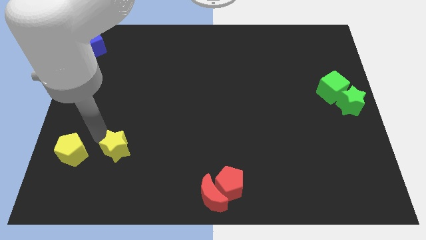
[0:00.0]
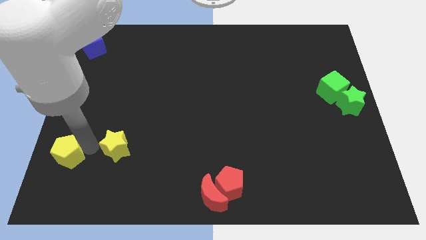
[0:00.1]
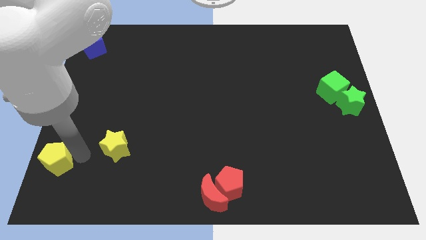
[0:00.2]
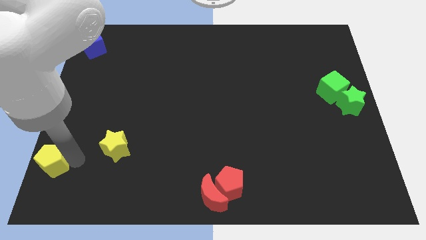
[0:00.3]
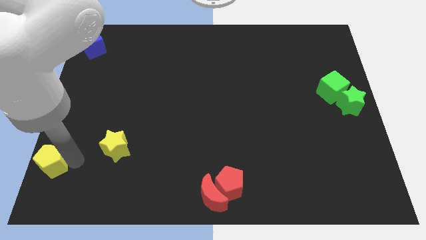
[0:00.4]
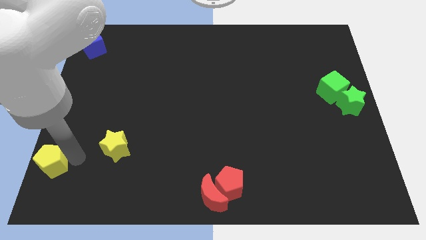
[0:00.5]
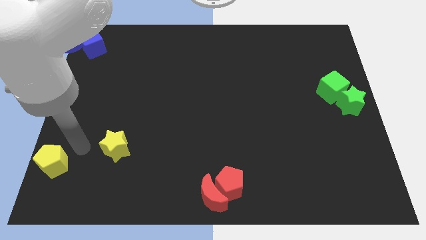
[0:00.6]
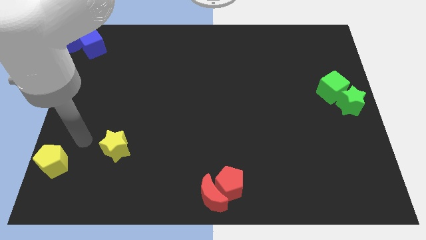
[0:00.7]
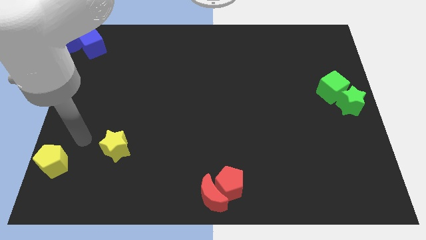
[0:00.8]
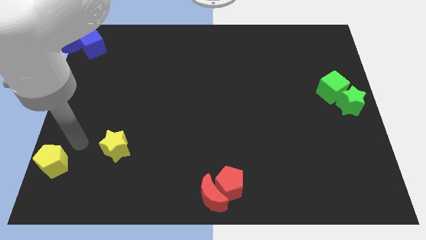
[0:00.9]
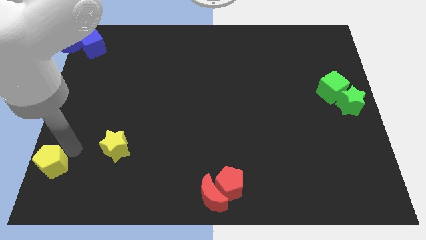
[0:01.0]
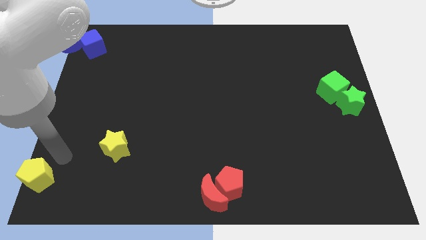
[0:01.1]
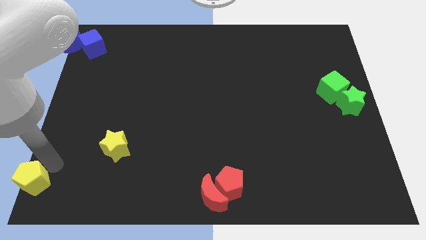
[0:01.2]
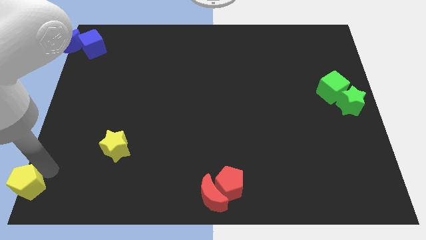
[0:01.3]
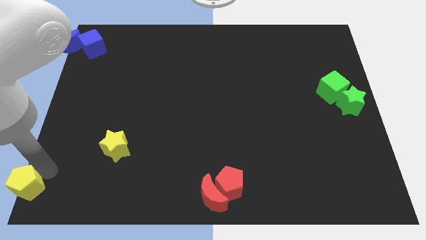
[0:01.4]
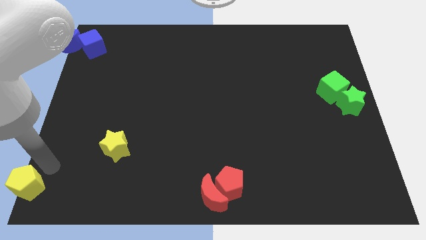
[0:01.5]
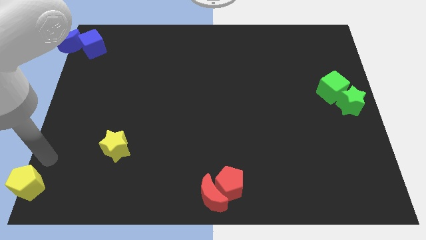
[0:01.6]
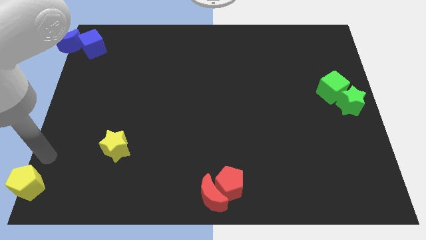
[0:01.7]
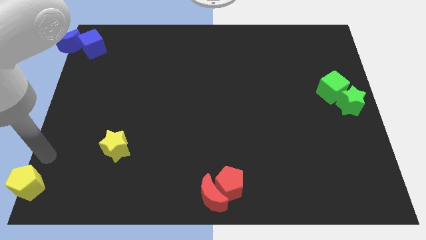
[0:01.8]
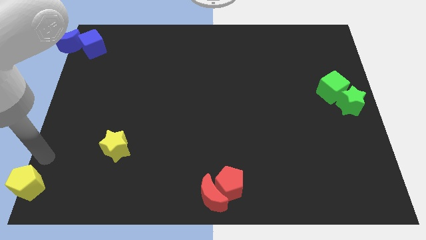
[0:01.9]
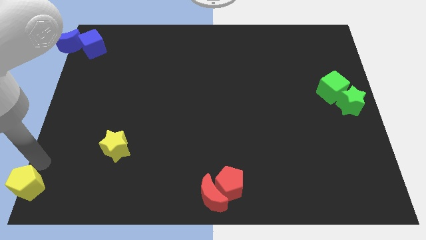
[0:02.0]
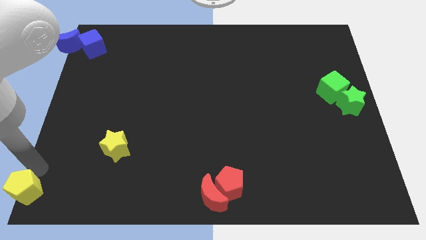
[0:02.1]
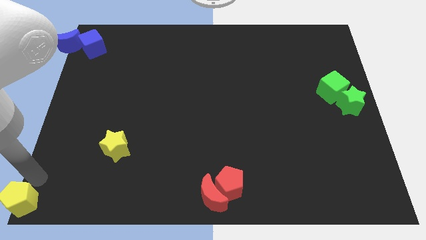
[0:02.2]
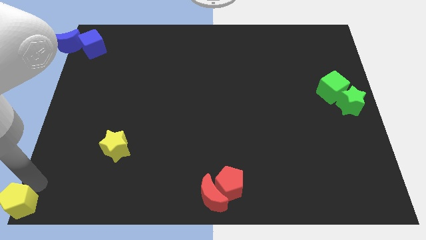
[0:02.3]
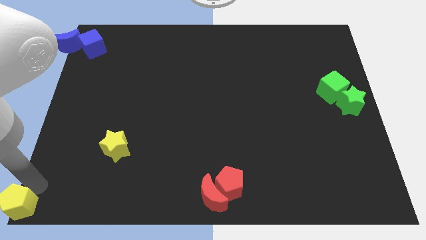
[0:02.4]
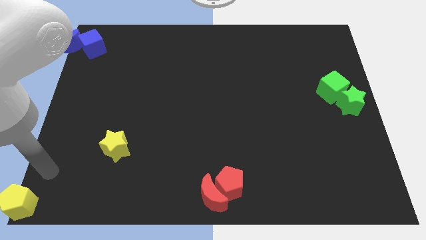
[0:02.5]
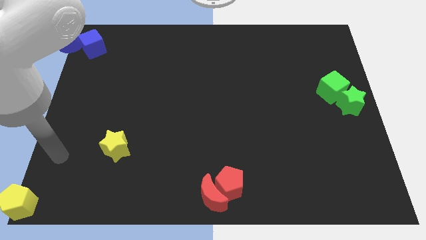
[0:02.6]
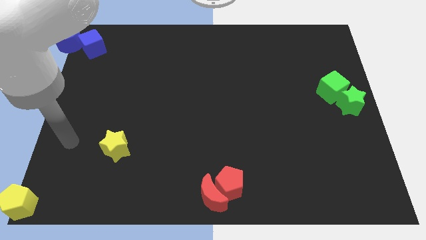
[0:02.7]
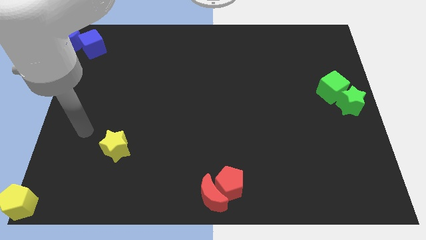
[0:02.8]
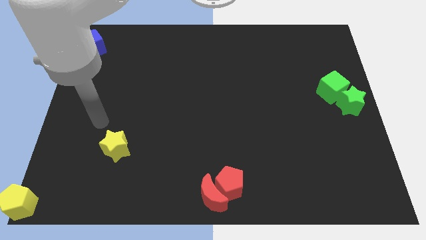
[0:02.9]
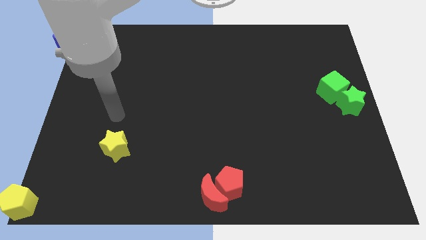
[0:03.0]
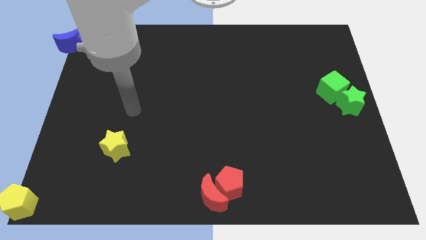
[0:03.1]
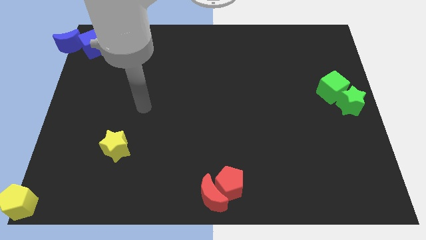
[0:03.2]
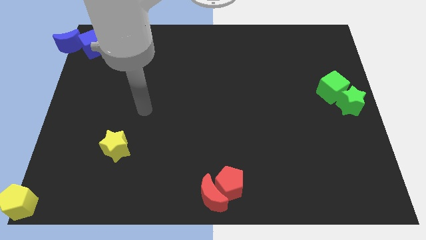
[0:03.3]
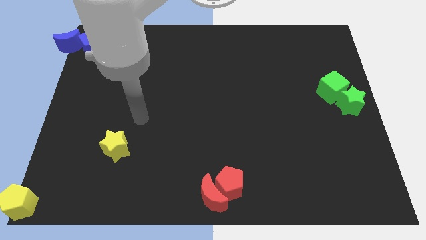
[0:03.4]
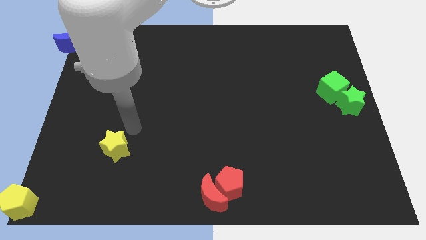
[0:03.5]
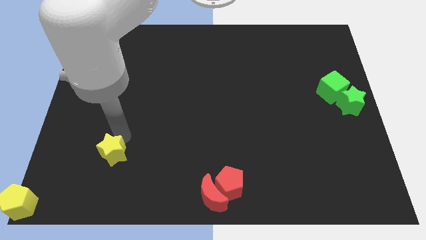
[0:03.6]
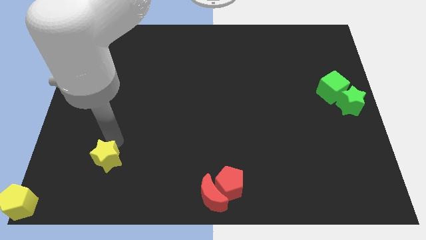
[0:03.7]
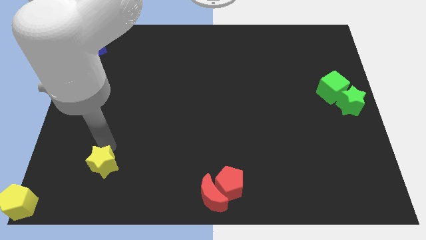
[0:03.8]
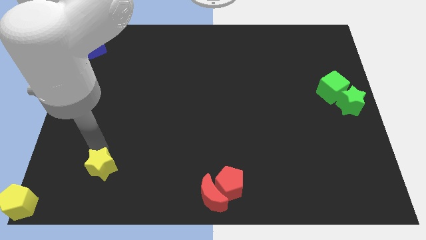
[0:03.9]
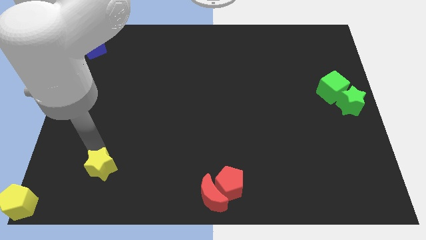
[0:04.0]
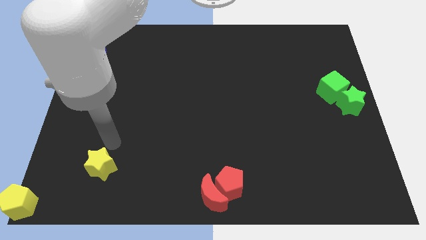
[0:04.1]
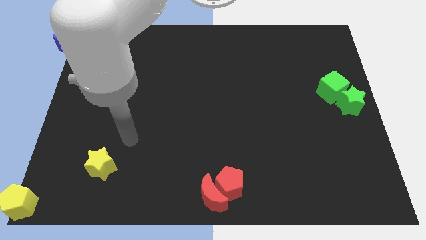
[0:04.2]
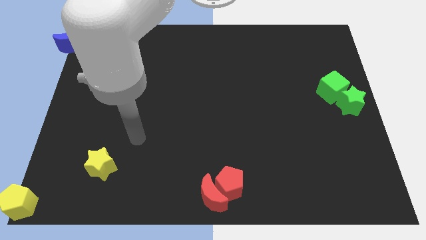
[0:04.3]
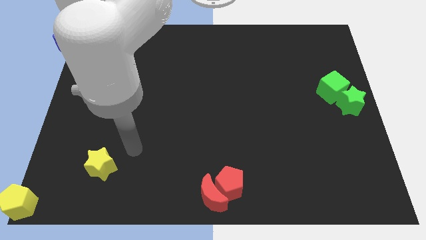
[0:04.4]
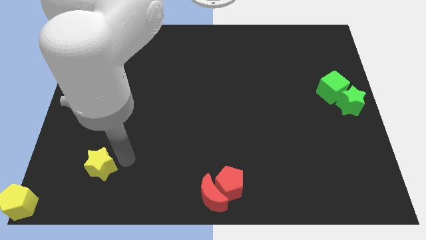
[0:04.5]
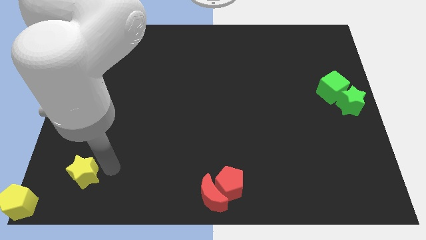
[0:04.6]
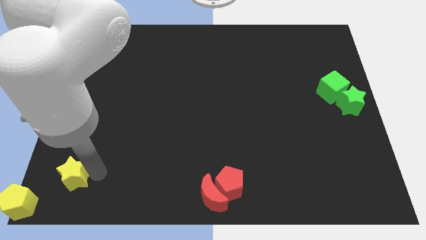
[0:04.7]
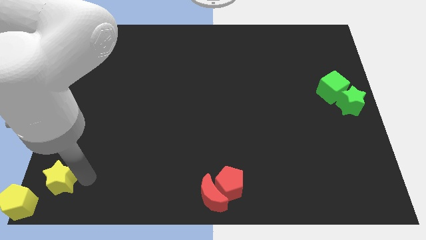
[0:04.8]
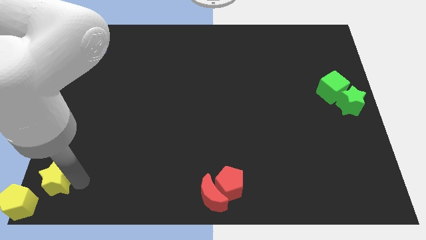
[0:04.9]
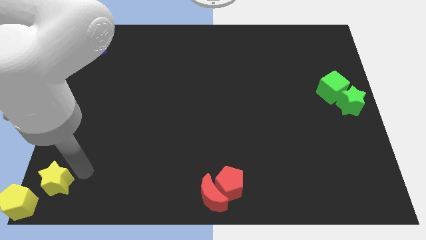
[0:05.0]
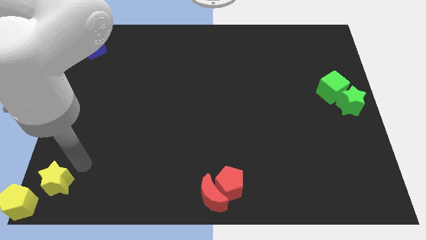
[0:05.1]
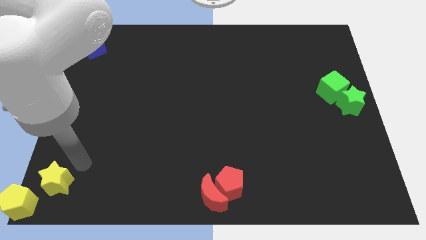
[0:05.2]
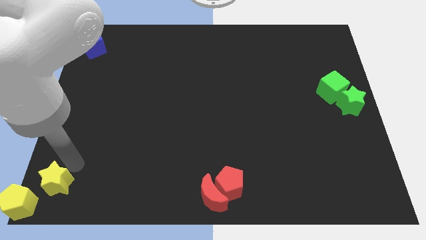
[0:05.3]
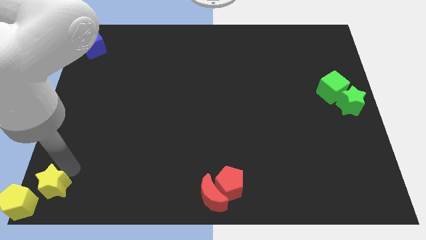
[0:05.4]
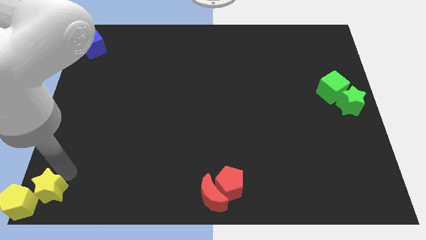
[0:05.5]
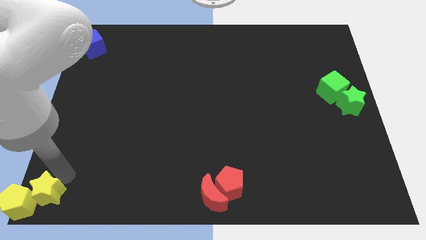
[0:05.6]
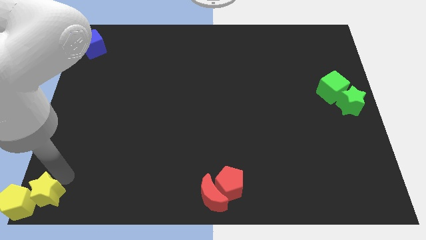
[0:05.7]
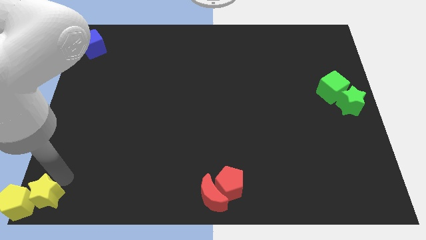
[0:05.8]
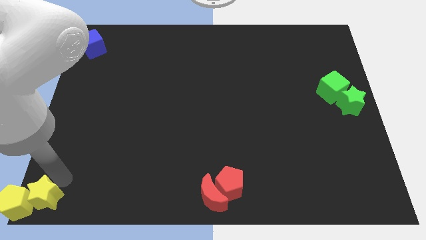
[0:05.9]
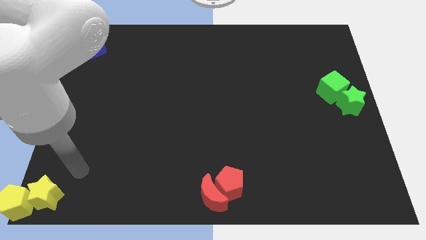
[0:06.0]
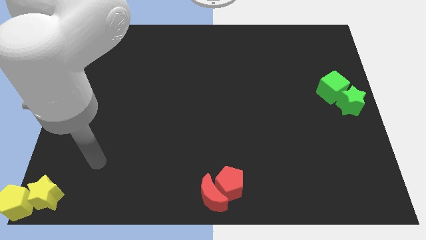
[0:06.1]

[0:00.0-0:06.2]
place the group of yellow blocks at the bottom left corner

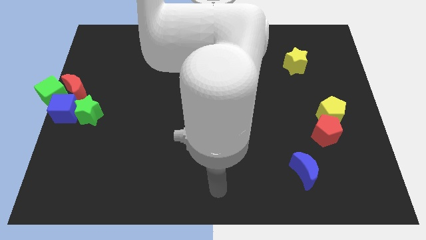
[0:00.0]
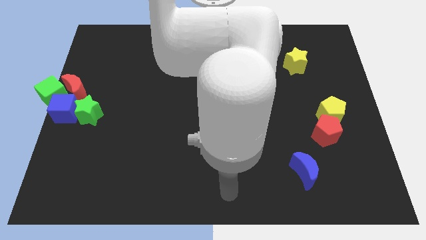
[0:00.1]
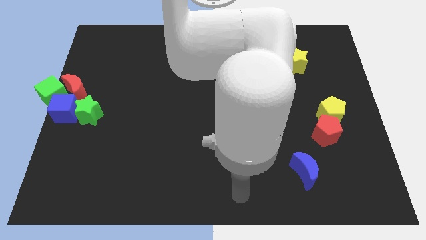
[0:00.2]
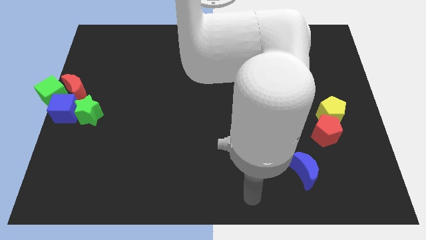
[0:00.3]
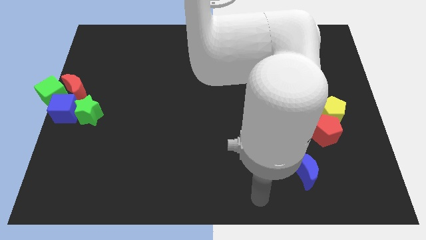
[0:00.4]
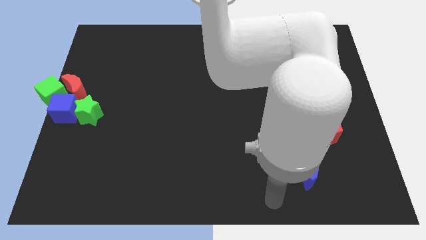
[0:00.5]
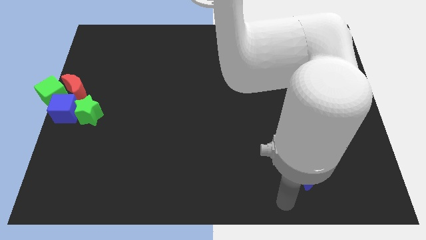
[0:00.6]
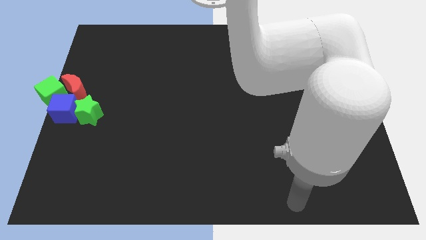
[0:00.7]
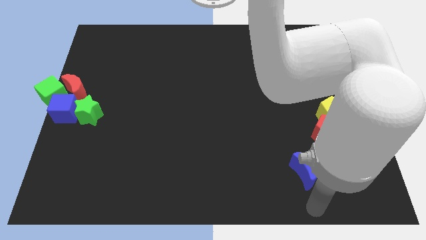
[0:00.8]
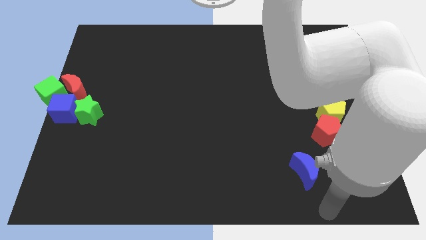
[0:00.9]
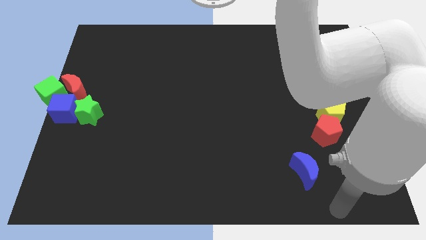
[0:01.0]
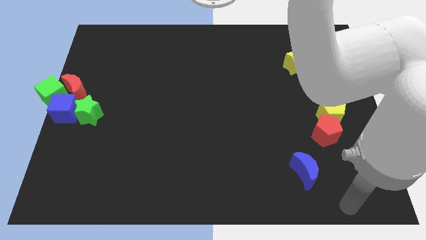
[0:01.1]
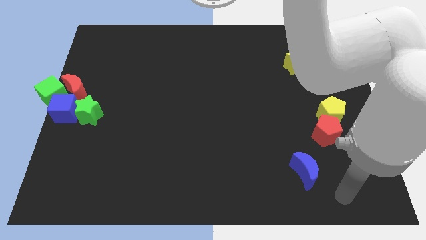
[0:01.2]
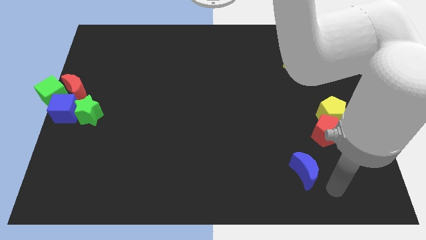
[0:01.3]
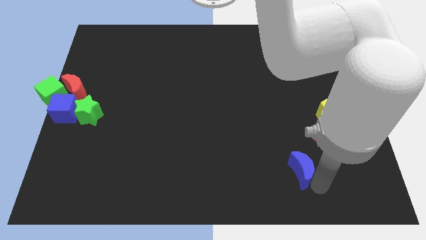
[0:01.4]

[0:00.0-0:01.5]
place the arm near the blue moon

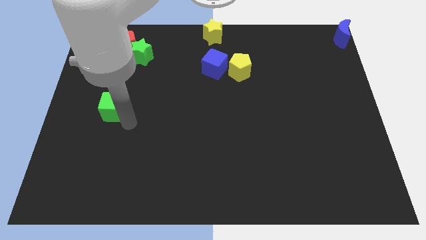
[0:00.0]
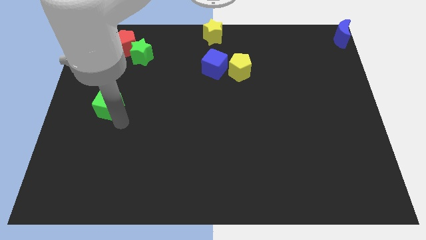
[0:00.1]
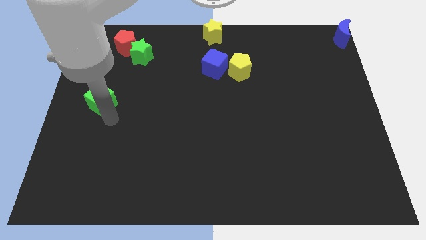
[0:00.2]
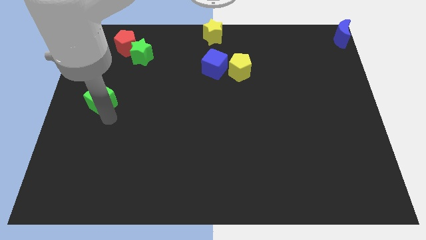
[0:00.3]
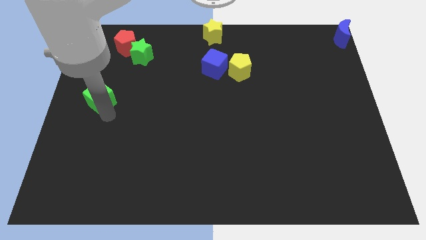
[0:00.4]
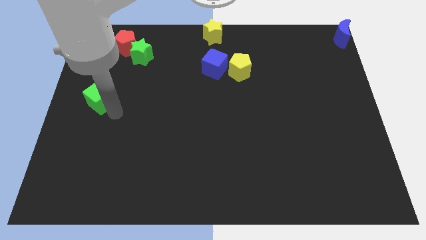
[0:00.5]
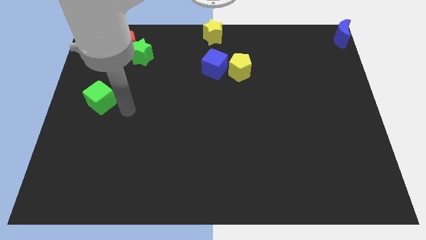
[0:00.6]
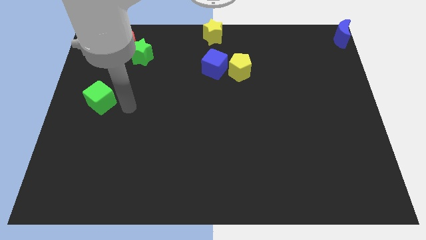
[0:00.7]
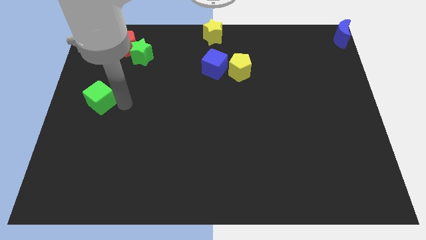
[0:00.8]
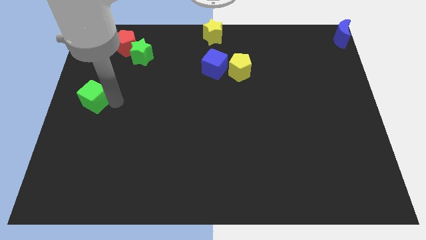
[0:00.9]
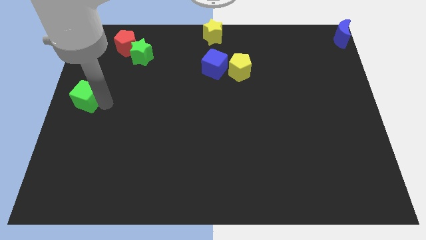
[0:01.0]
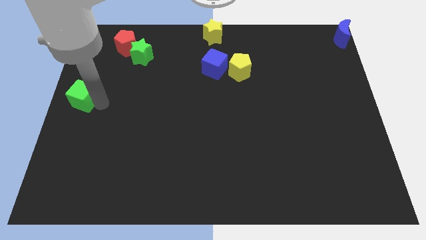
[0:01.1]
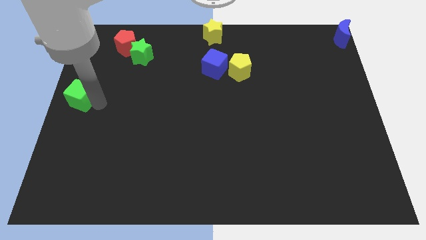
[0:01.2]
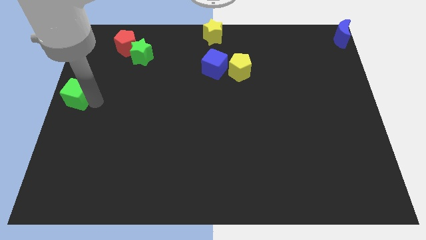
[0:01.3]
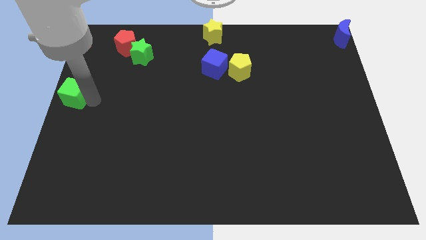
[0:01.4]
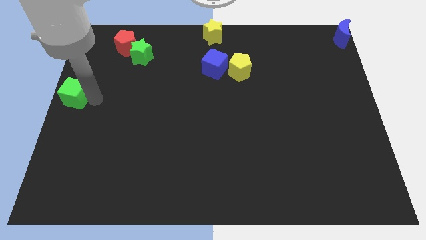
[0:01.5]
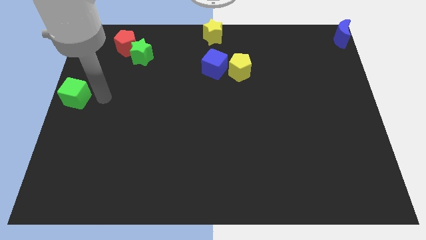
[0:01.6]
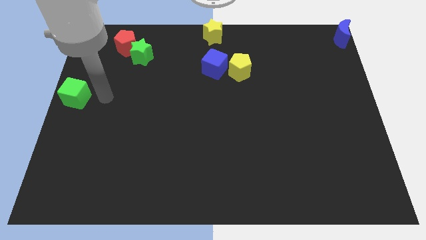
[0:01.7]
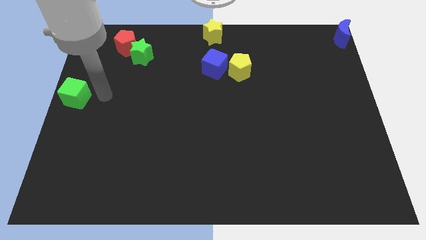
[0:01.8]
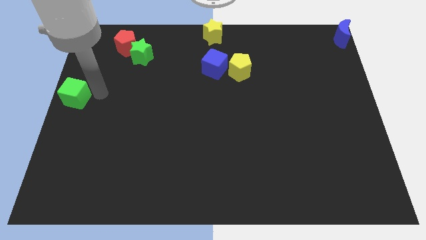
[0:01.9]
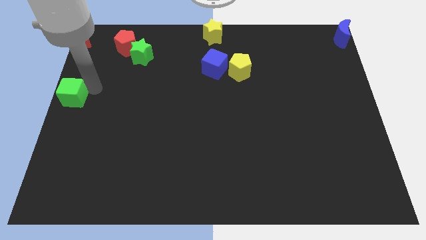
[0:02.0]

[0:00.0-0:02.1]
push the green cube to the center left of the board
